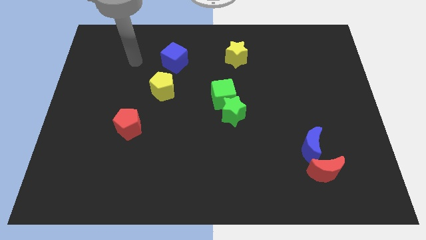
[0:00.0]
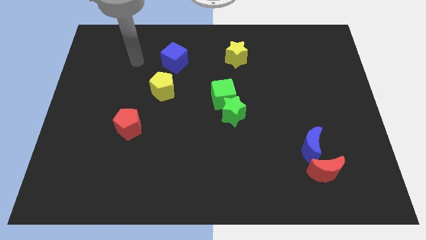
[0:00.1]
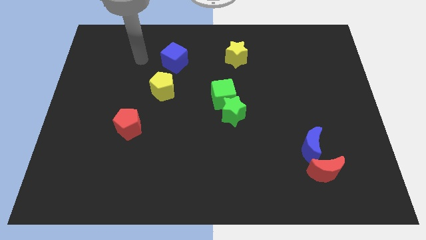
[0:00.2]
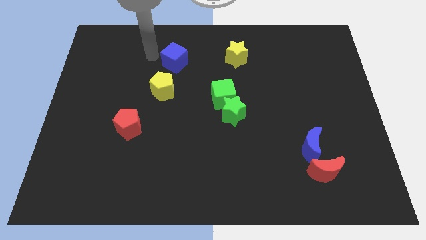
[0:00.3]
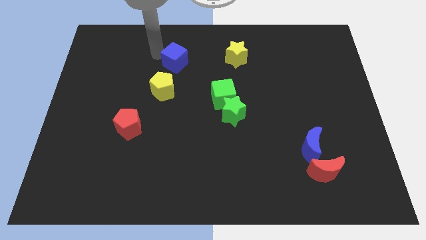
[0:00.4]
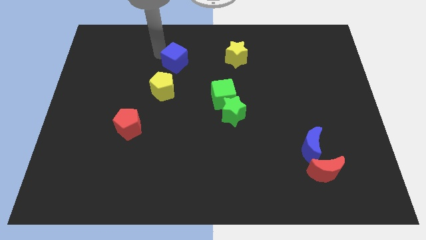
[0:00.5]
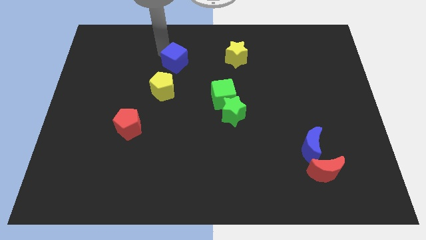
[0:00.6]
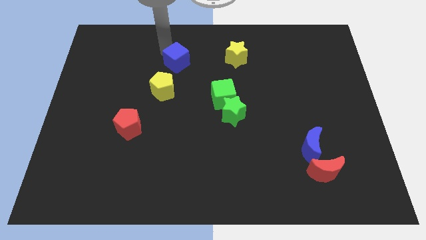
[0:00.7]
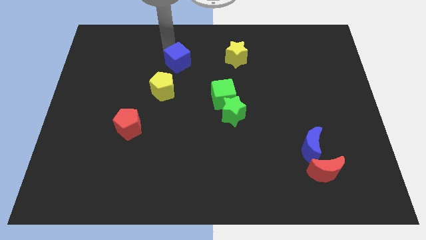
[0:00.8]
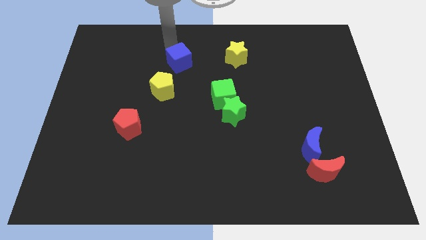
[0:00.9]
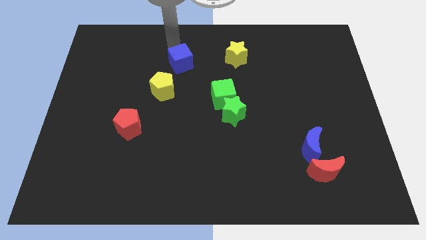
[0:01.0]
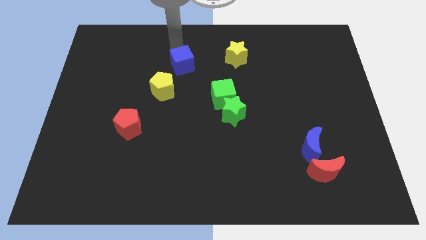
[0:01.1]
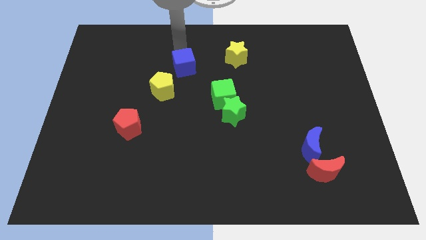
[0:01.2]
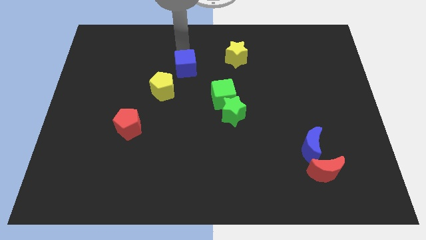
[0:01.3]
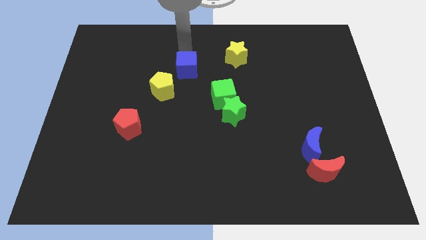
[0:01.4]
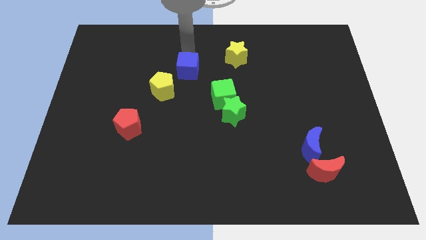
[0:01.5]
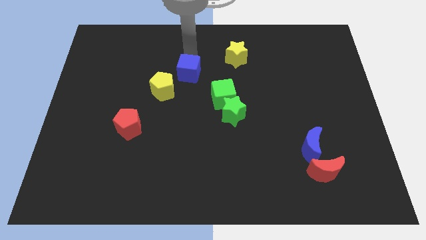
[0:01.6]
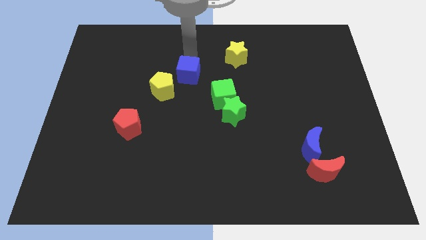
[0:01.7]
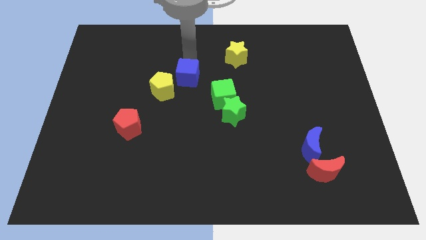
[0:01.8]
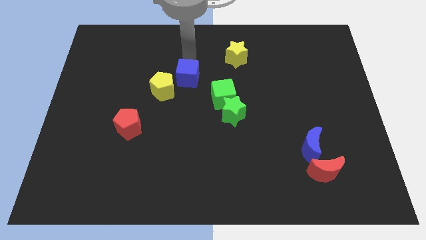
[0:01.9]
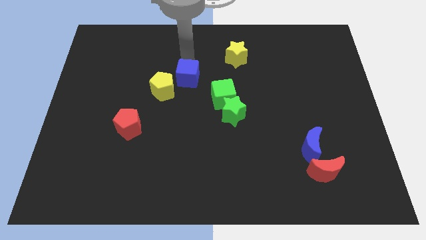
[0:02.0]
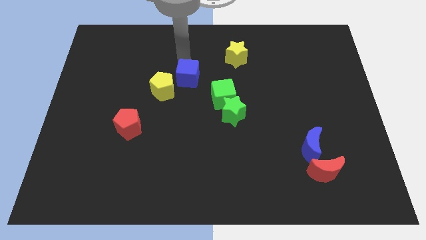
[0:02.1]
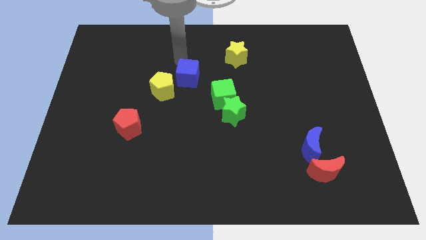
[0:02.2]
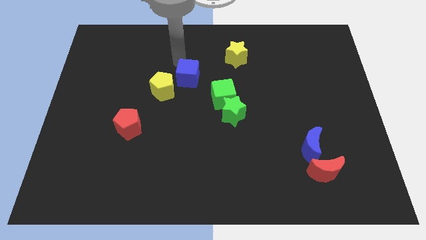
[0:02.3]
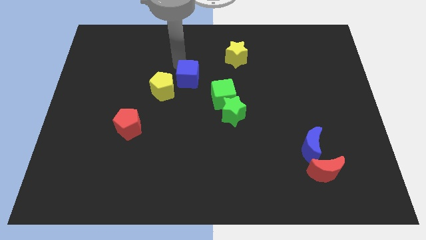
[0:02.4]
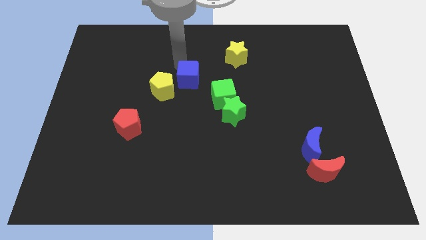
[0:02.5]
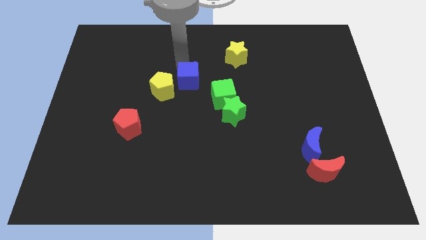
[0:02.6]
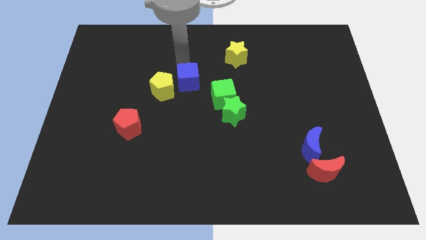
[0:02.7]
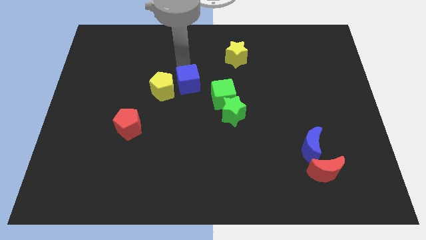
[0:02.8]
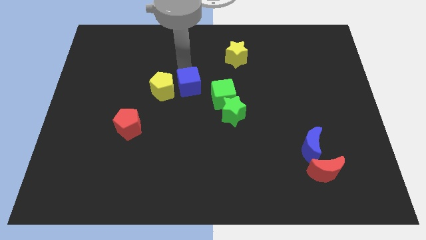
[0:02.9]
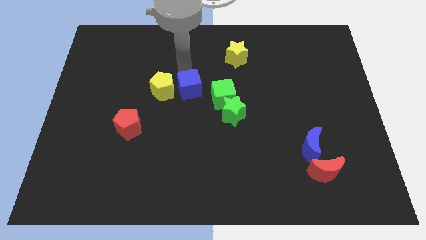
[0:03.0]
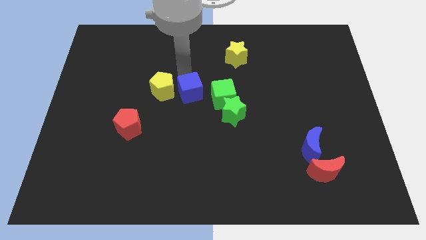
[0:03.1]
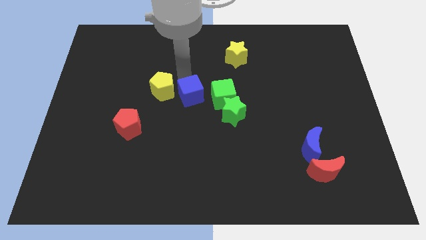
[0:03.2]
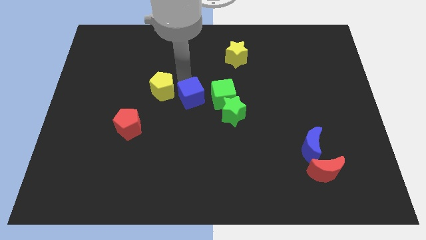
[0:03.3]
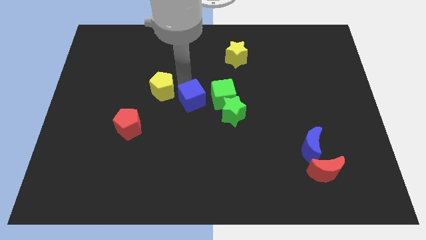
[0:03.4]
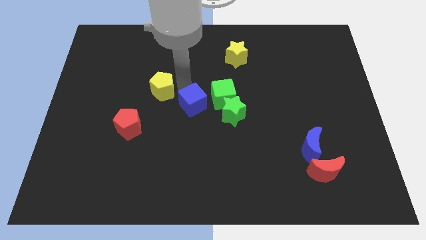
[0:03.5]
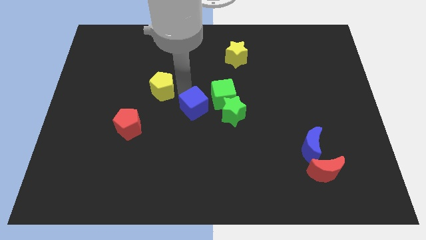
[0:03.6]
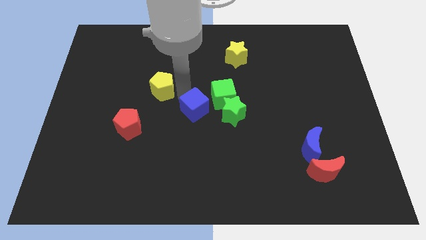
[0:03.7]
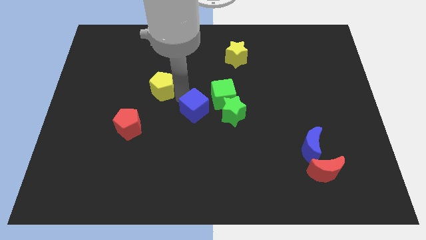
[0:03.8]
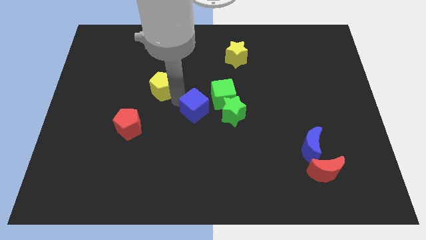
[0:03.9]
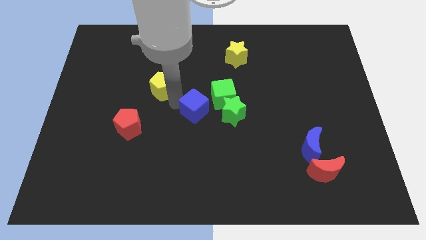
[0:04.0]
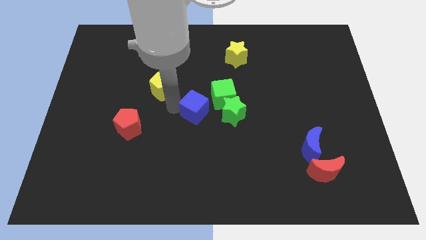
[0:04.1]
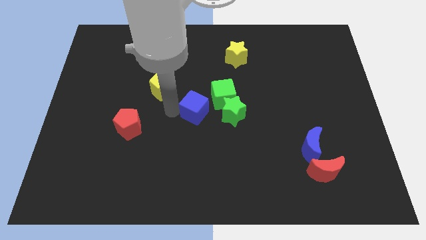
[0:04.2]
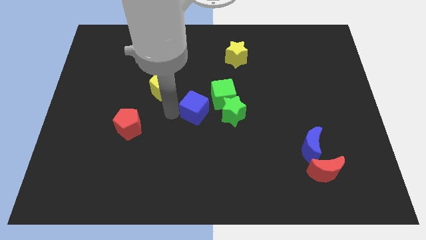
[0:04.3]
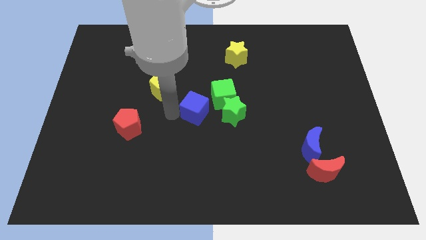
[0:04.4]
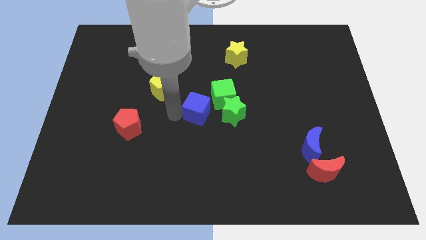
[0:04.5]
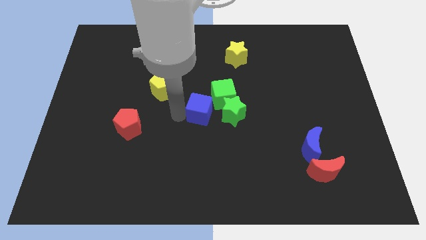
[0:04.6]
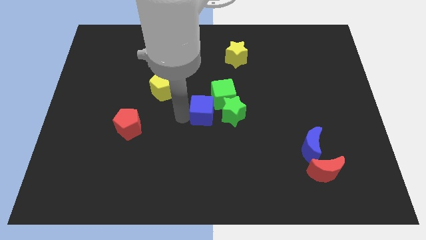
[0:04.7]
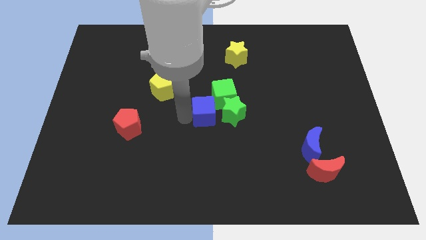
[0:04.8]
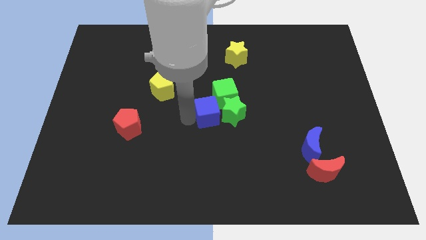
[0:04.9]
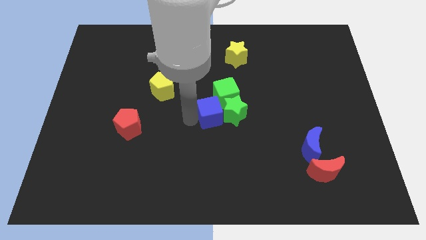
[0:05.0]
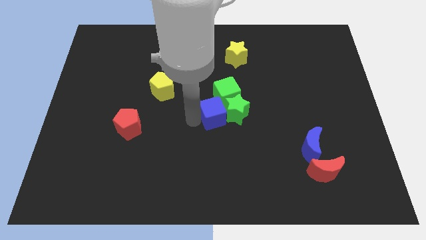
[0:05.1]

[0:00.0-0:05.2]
push the blue cube to the green star

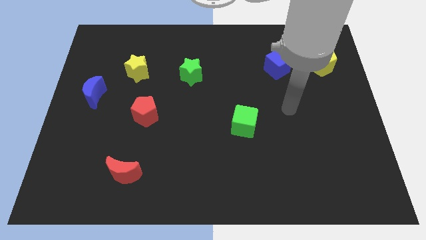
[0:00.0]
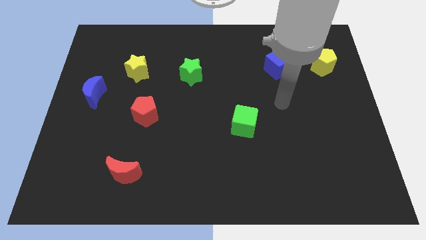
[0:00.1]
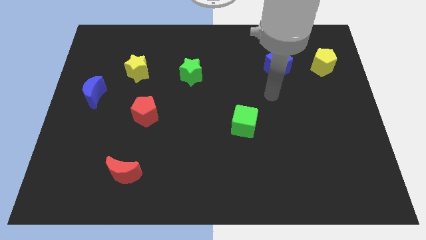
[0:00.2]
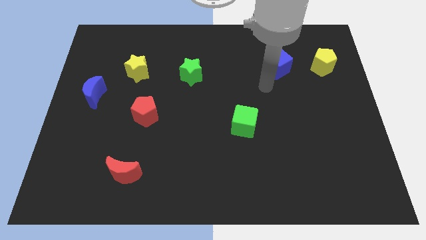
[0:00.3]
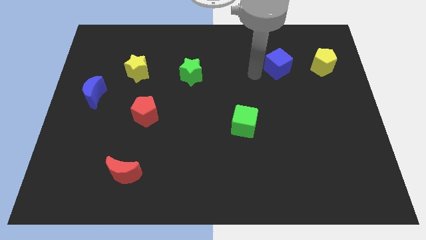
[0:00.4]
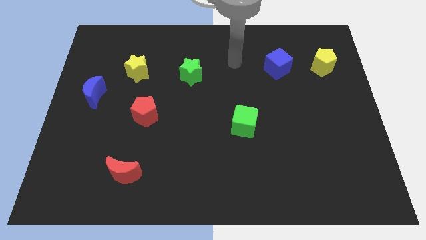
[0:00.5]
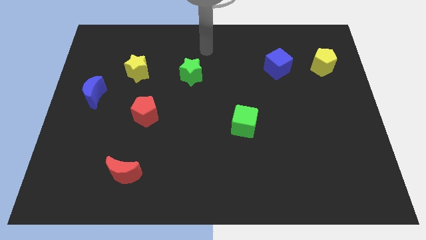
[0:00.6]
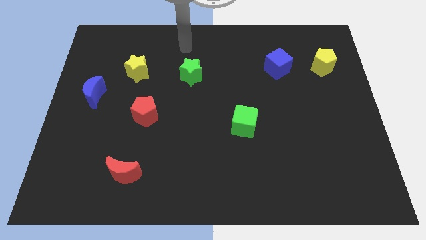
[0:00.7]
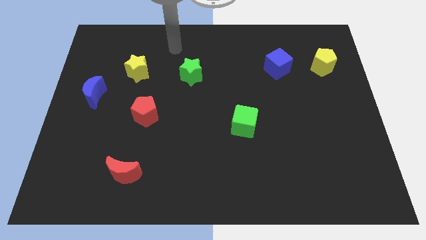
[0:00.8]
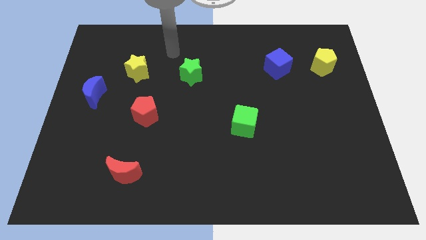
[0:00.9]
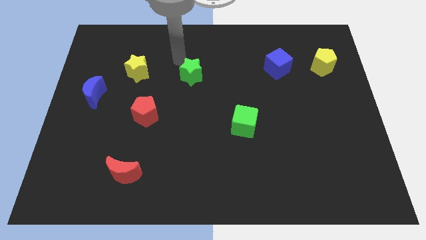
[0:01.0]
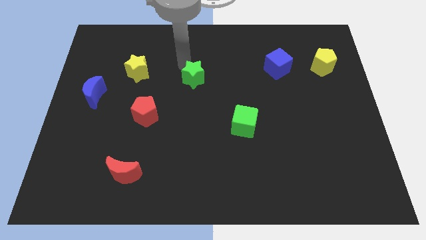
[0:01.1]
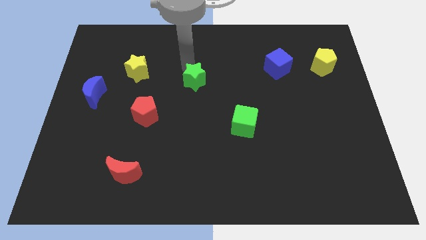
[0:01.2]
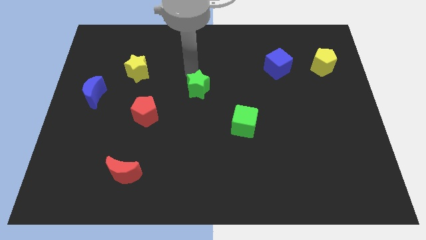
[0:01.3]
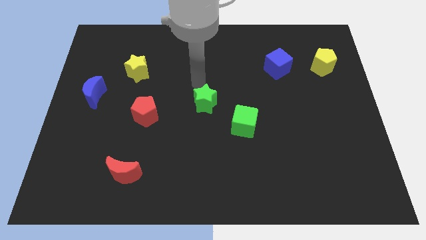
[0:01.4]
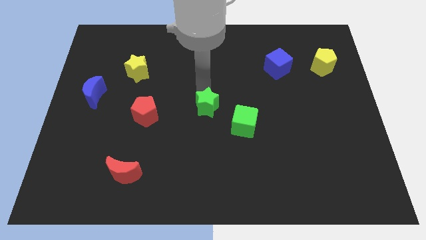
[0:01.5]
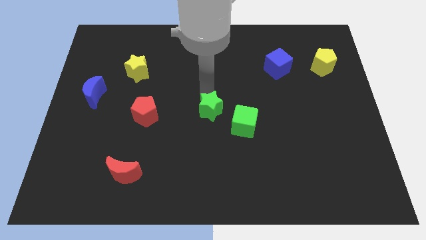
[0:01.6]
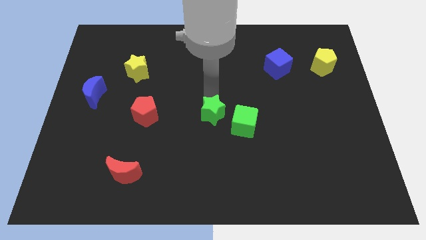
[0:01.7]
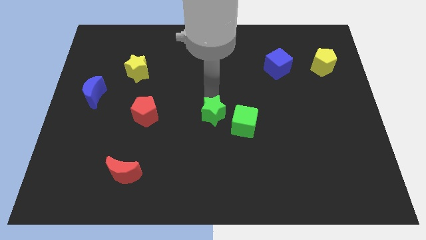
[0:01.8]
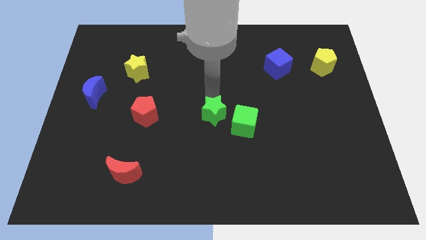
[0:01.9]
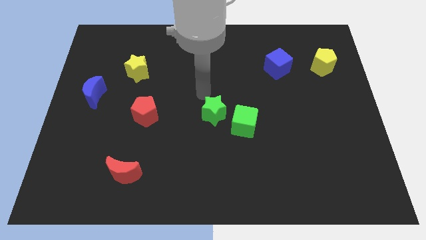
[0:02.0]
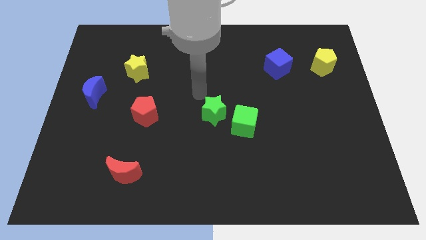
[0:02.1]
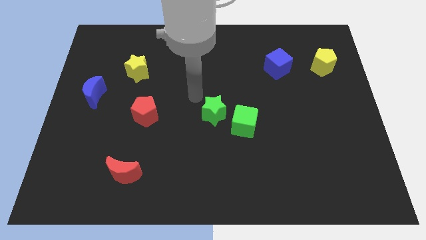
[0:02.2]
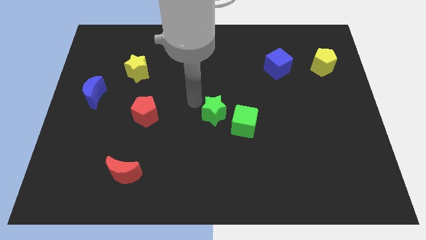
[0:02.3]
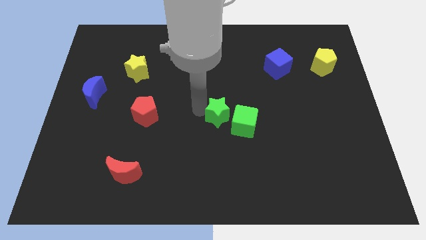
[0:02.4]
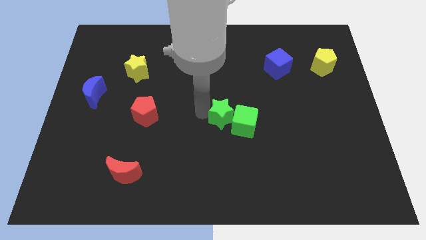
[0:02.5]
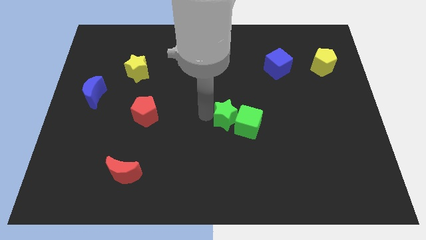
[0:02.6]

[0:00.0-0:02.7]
put the green star close to the green cube

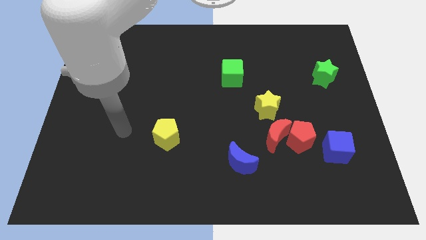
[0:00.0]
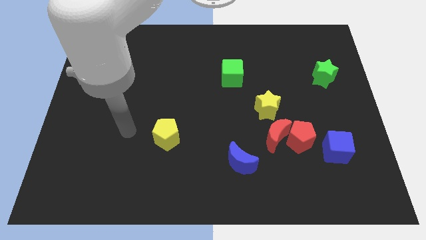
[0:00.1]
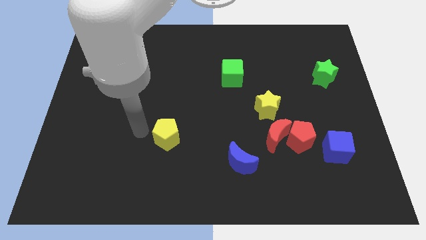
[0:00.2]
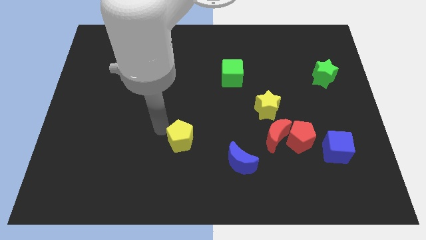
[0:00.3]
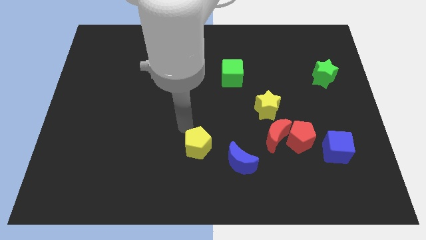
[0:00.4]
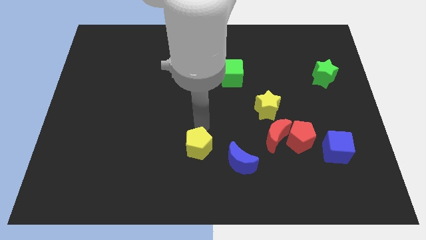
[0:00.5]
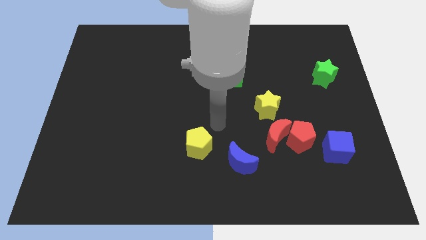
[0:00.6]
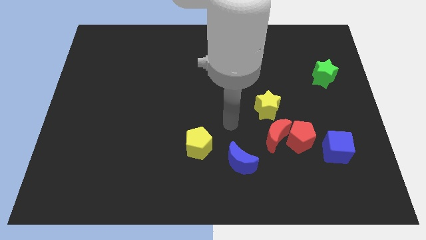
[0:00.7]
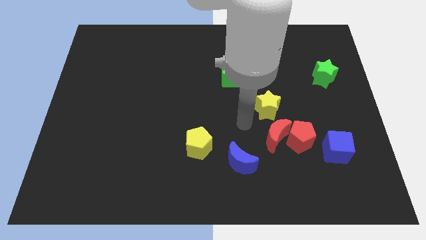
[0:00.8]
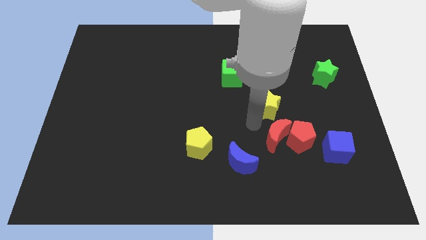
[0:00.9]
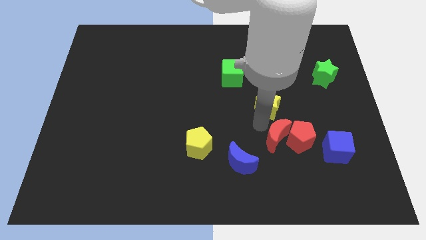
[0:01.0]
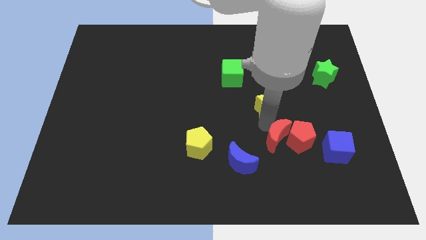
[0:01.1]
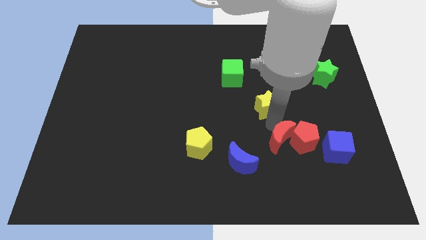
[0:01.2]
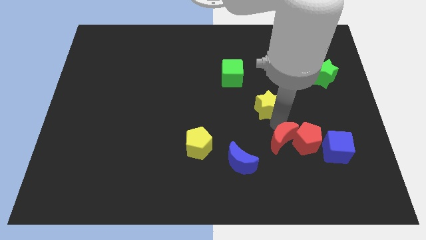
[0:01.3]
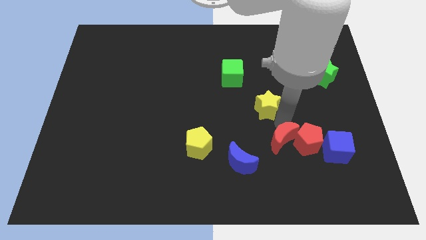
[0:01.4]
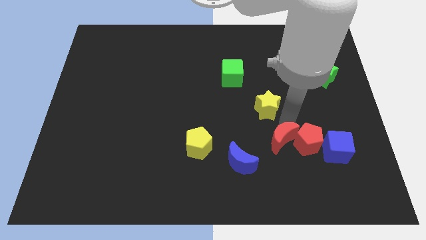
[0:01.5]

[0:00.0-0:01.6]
move the red pentagon towards the blue cube
